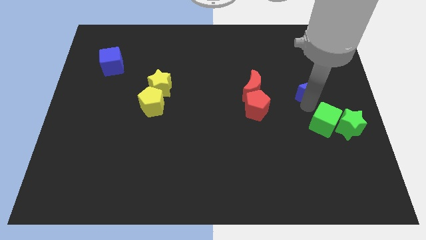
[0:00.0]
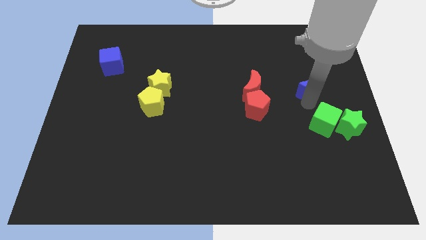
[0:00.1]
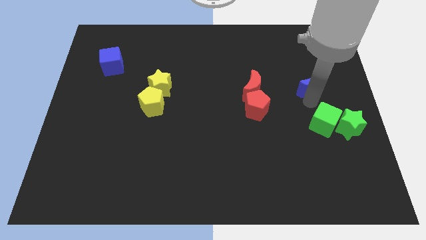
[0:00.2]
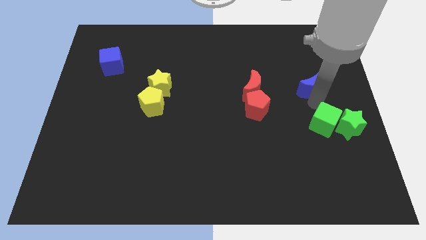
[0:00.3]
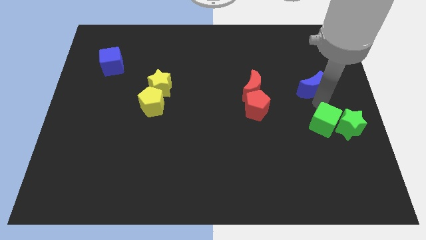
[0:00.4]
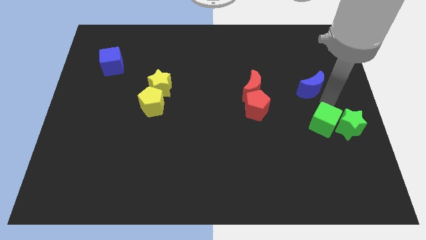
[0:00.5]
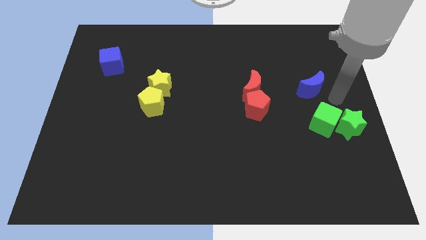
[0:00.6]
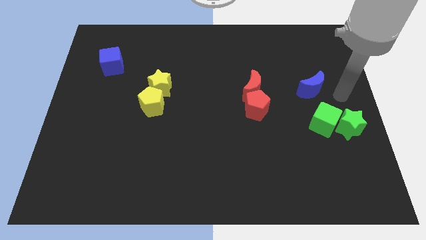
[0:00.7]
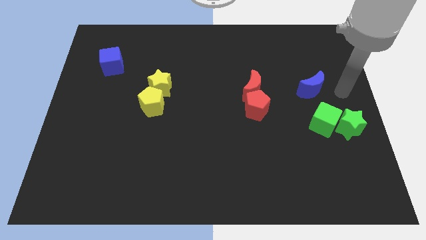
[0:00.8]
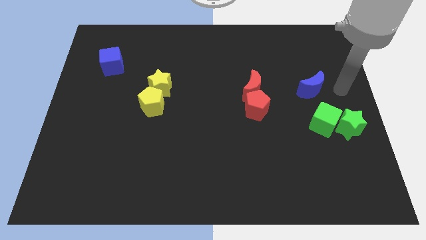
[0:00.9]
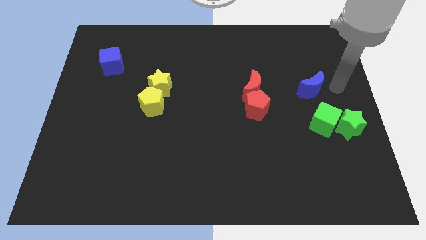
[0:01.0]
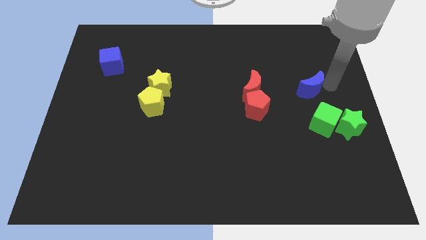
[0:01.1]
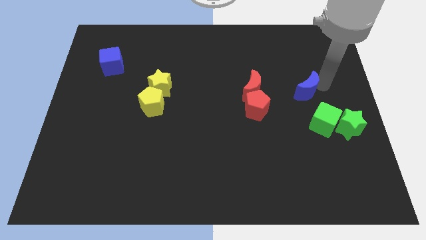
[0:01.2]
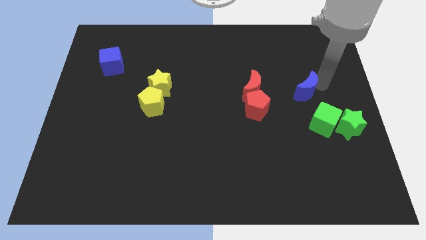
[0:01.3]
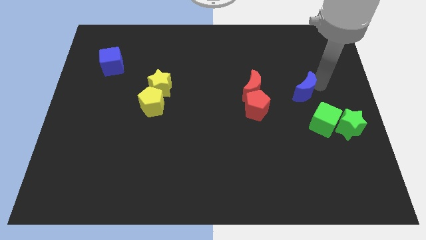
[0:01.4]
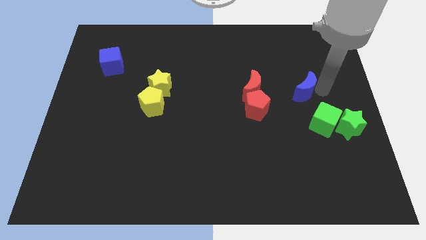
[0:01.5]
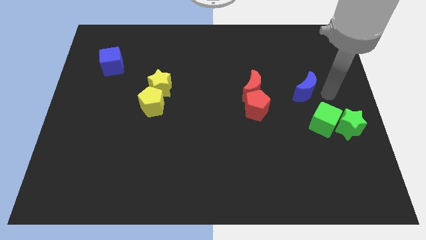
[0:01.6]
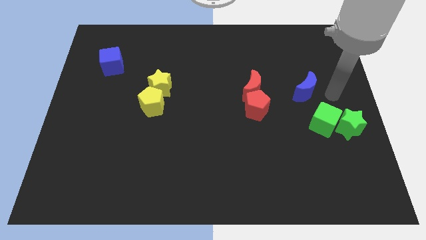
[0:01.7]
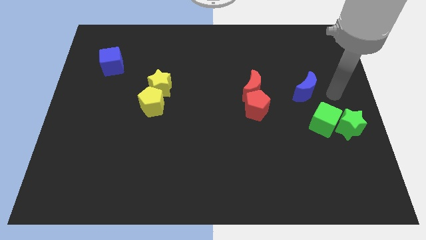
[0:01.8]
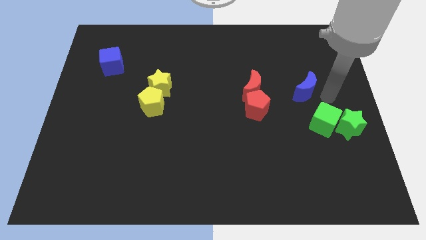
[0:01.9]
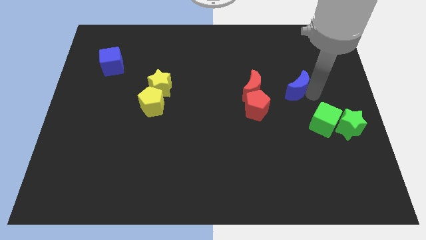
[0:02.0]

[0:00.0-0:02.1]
move the blue moon slightly to the left

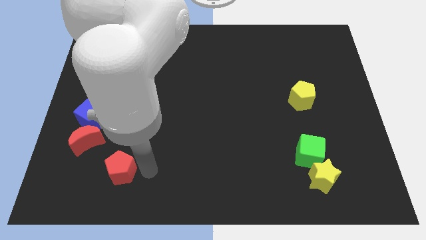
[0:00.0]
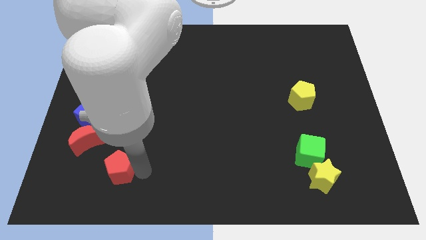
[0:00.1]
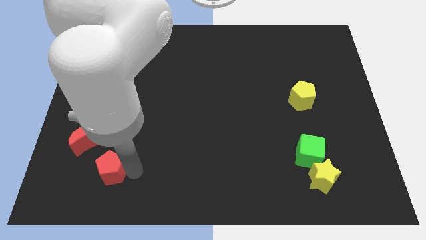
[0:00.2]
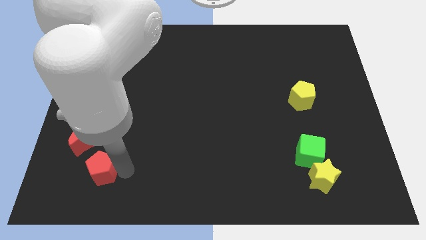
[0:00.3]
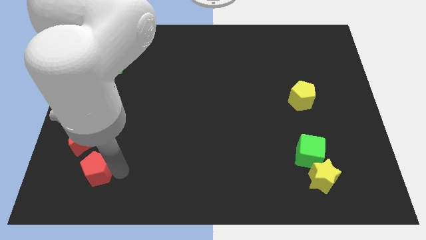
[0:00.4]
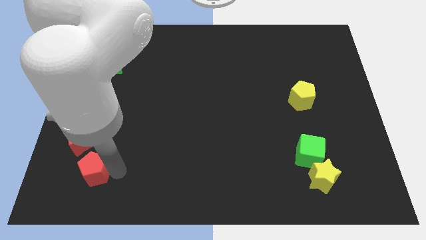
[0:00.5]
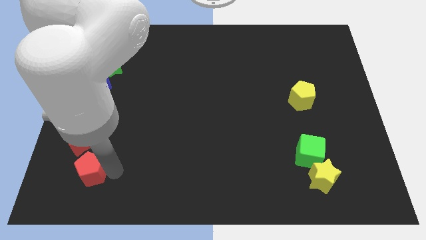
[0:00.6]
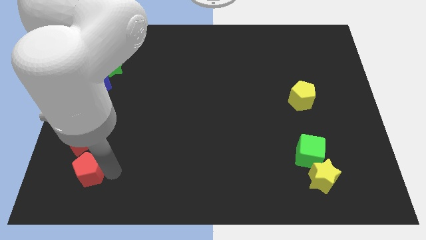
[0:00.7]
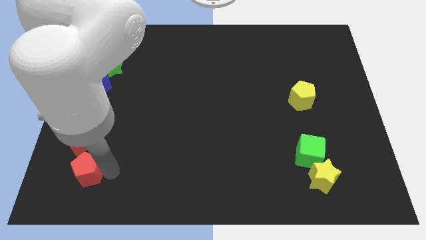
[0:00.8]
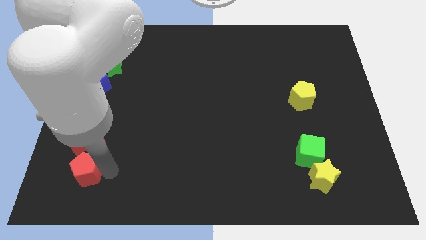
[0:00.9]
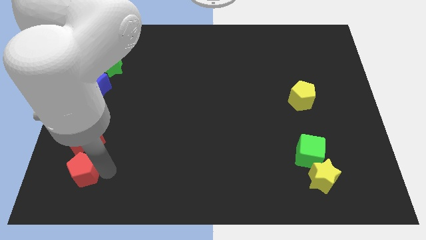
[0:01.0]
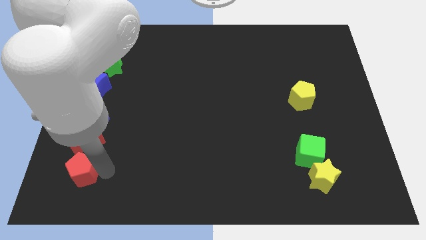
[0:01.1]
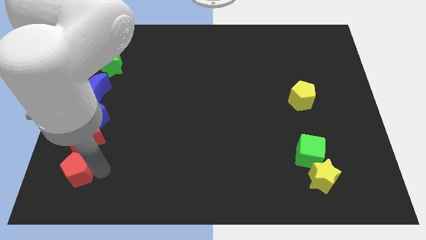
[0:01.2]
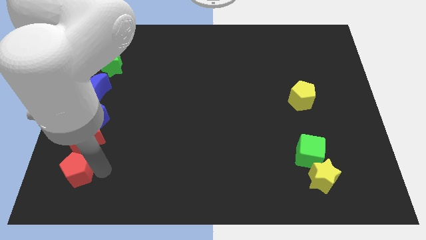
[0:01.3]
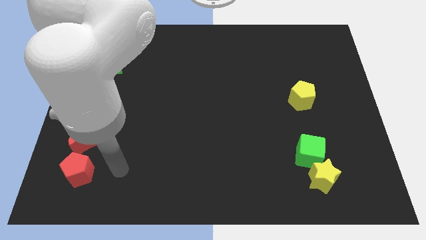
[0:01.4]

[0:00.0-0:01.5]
place the red pentagon at the bottom side of the vertical line of blocks

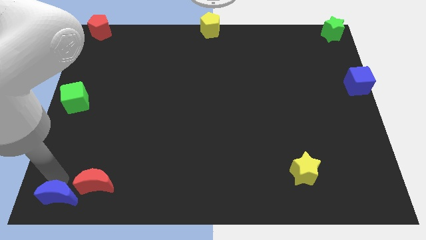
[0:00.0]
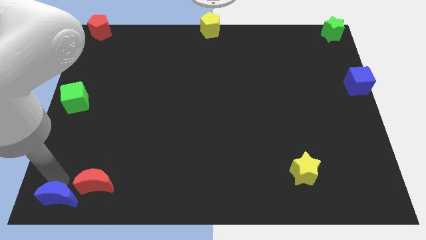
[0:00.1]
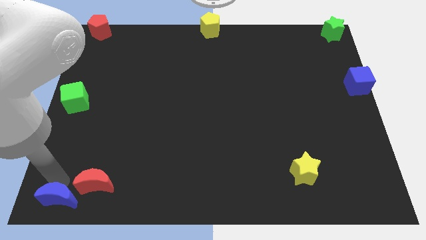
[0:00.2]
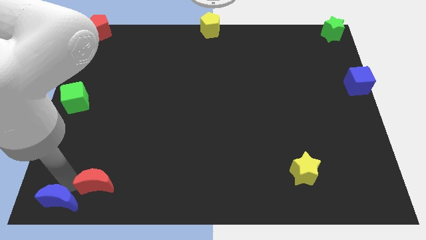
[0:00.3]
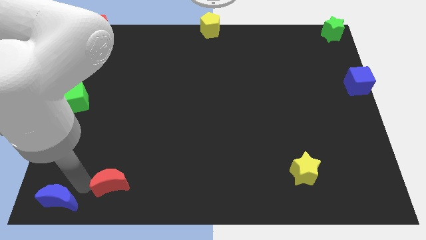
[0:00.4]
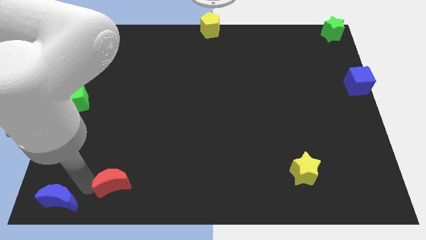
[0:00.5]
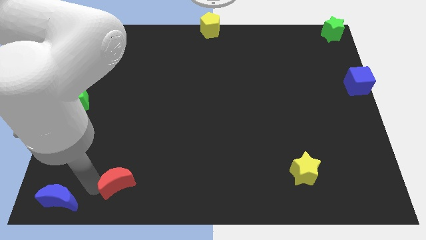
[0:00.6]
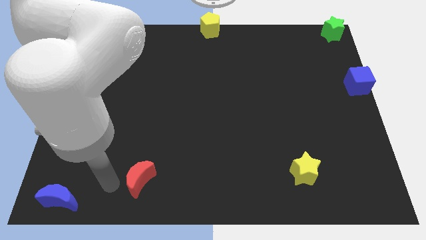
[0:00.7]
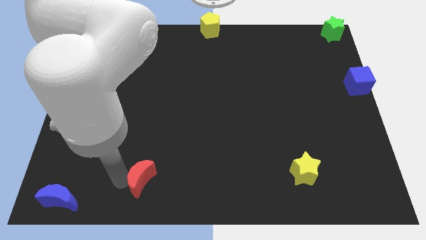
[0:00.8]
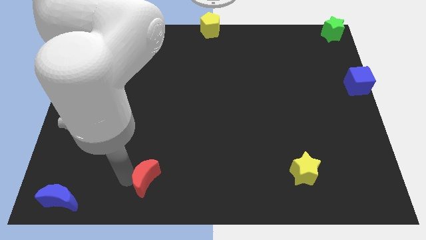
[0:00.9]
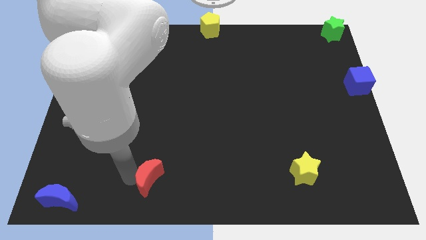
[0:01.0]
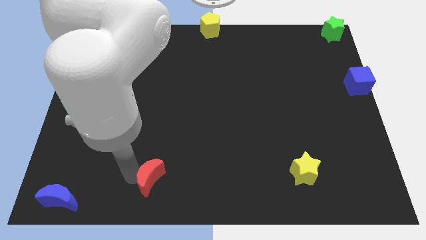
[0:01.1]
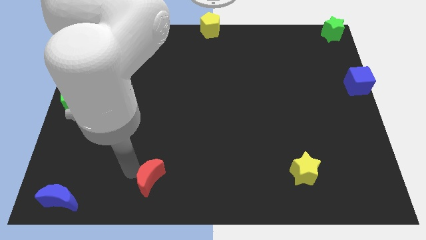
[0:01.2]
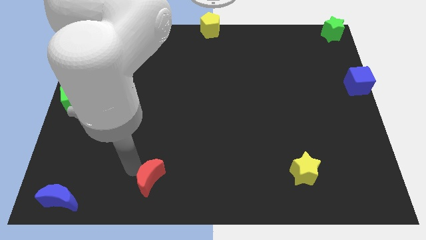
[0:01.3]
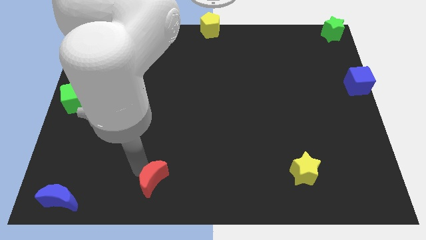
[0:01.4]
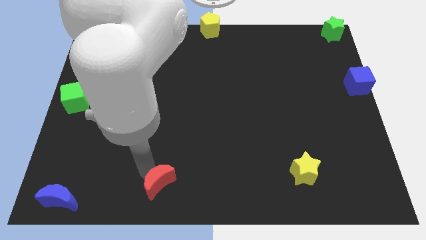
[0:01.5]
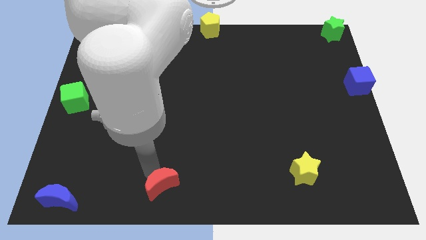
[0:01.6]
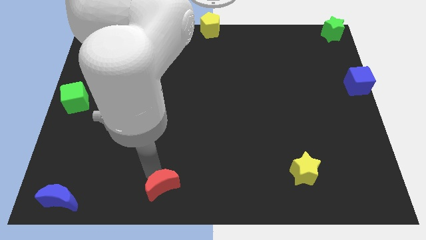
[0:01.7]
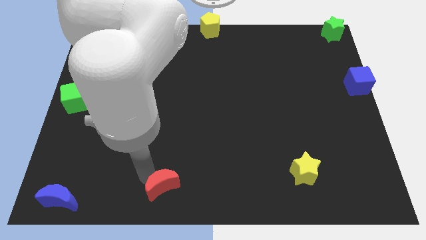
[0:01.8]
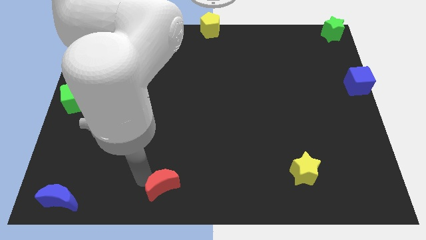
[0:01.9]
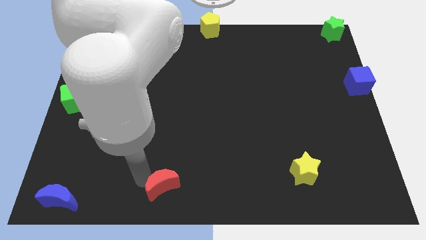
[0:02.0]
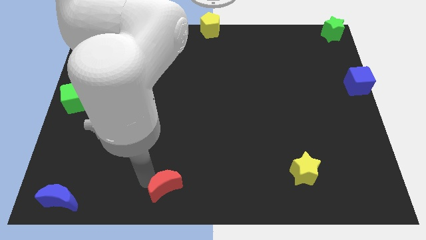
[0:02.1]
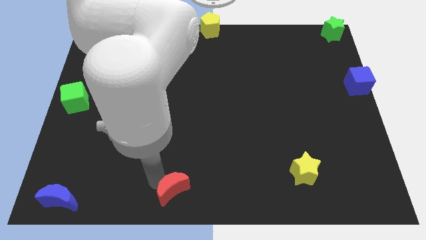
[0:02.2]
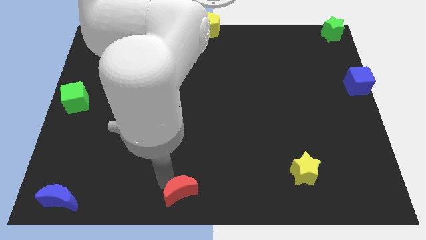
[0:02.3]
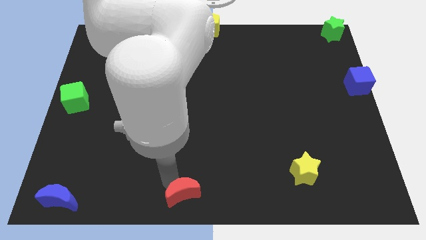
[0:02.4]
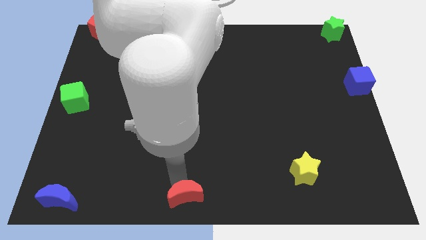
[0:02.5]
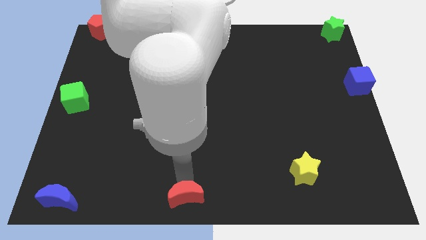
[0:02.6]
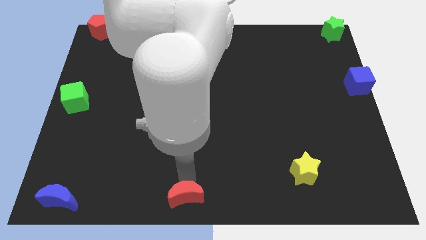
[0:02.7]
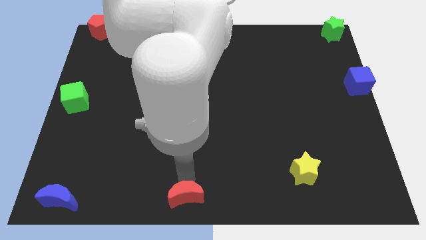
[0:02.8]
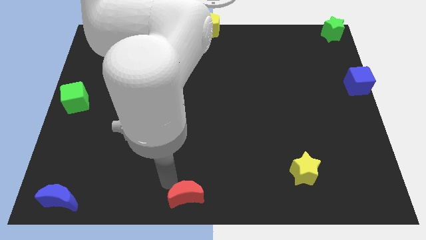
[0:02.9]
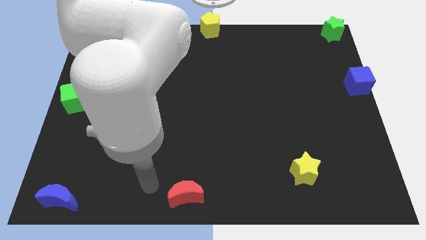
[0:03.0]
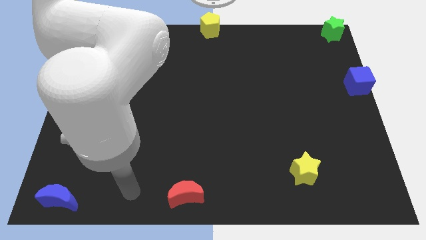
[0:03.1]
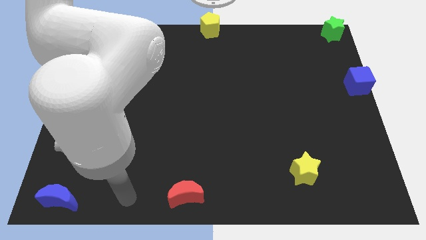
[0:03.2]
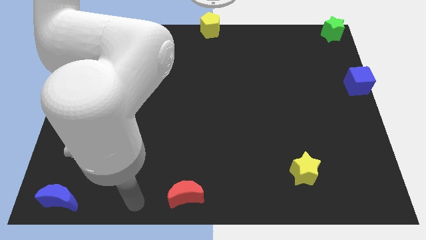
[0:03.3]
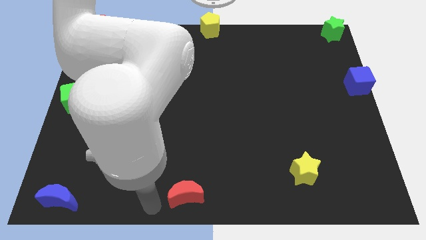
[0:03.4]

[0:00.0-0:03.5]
push the red crescent towards the bottom center of the board

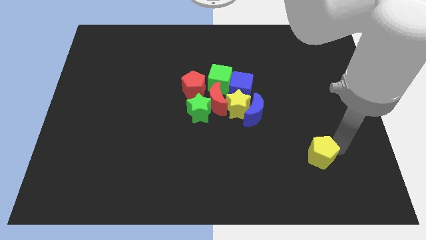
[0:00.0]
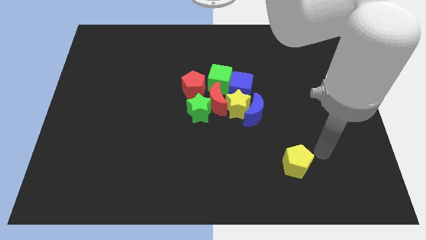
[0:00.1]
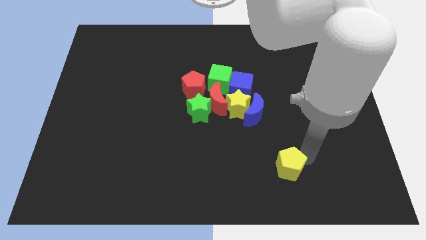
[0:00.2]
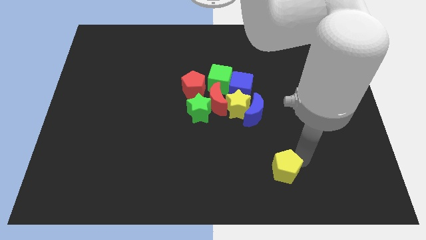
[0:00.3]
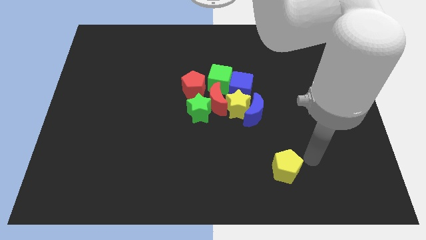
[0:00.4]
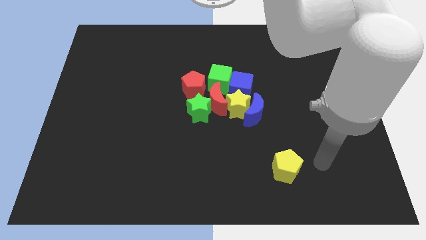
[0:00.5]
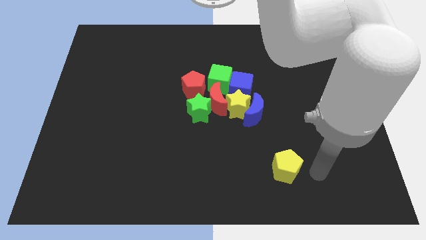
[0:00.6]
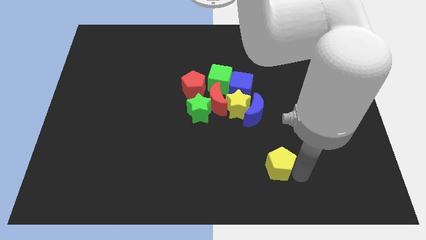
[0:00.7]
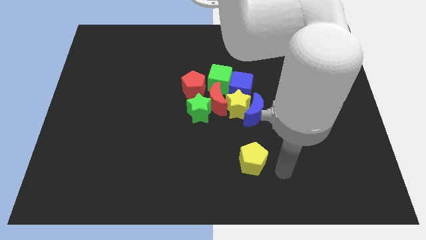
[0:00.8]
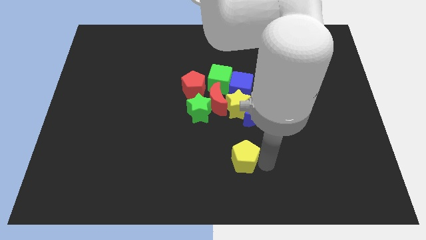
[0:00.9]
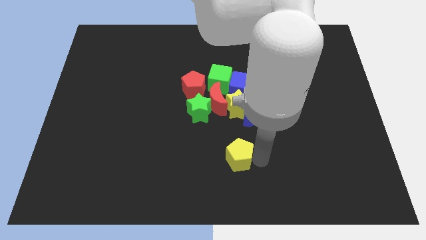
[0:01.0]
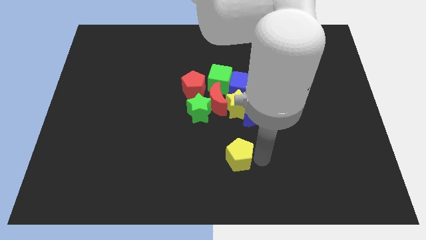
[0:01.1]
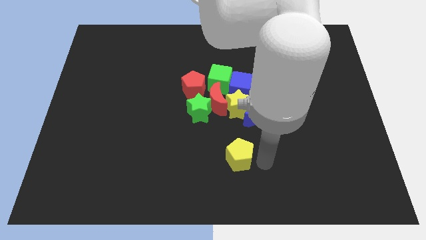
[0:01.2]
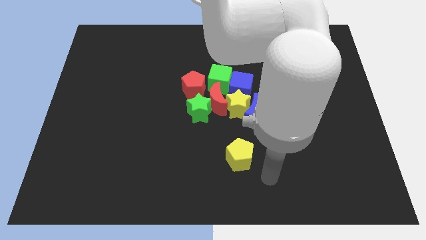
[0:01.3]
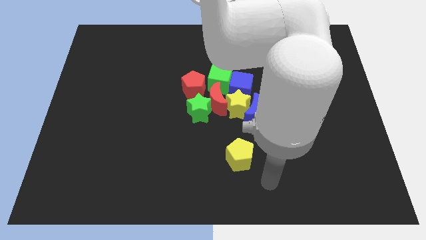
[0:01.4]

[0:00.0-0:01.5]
move yellow pentagon below the yellow star

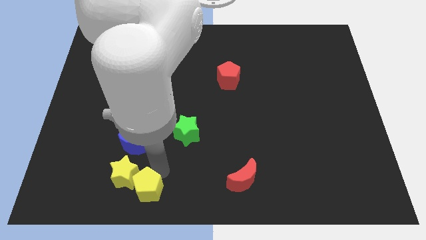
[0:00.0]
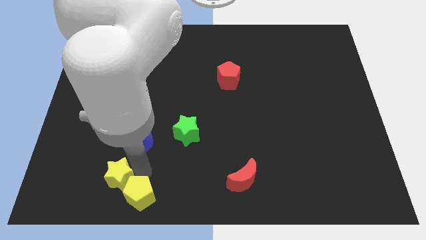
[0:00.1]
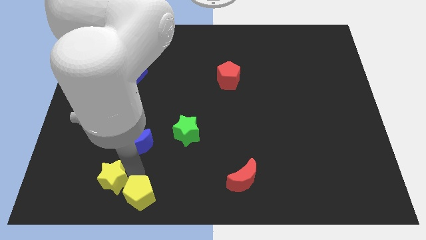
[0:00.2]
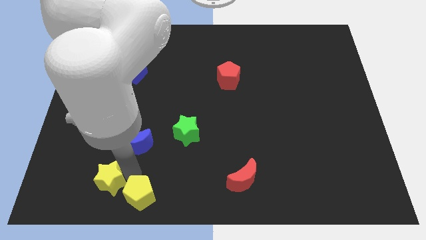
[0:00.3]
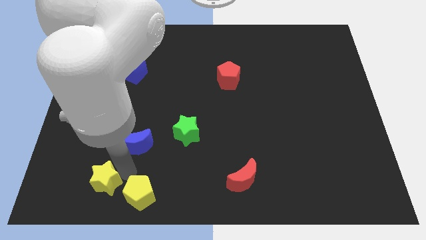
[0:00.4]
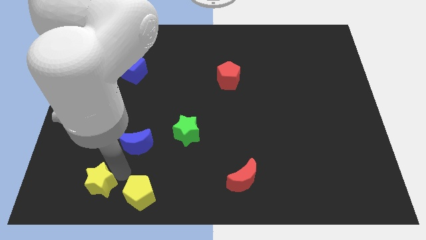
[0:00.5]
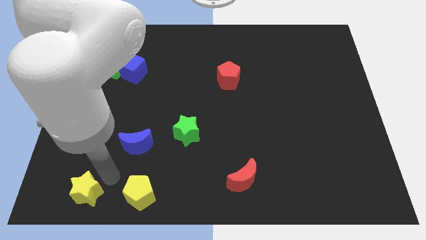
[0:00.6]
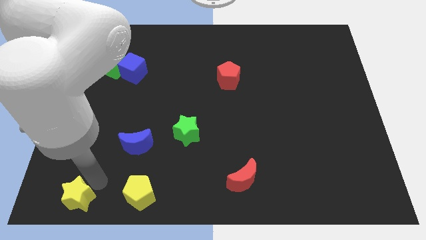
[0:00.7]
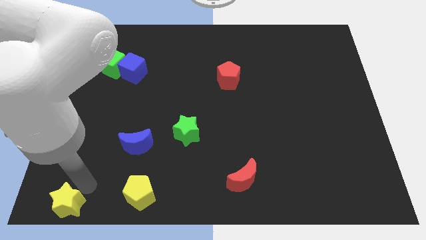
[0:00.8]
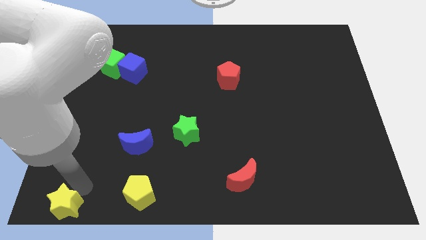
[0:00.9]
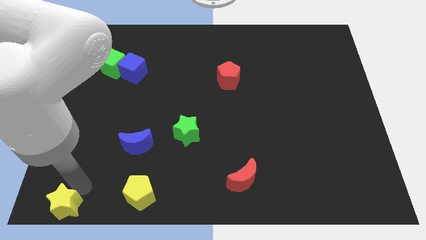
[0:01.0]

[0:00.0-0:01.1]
slide yellow star towards bottom left
